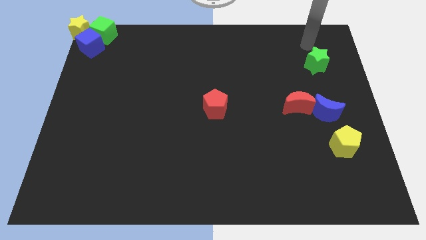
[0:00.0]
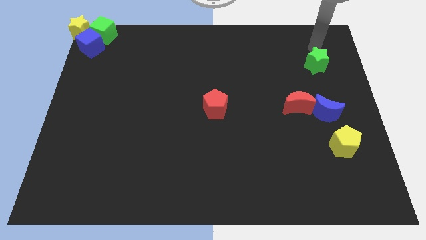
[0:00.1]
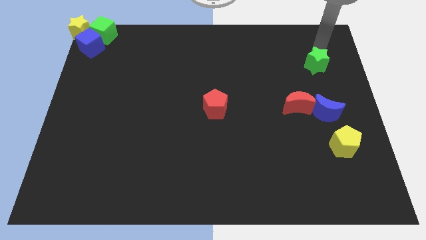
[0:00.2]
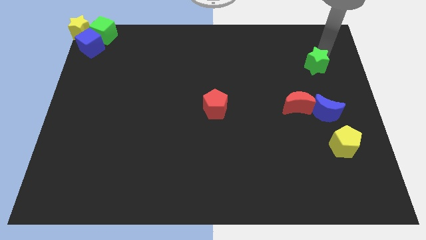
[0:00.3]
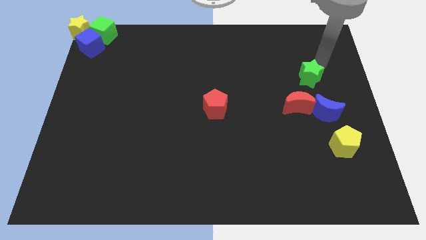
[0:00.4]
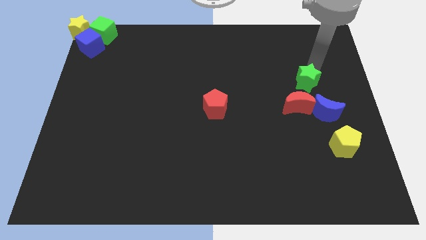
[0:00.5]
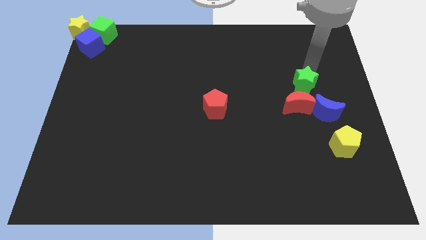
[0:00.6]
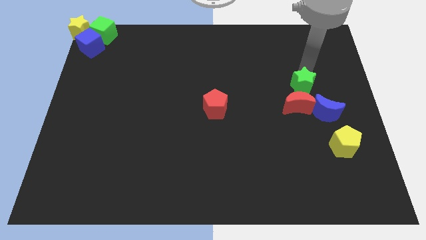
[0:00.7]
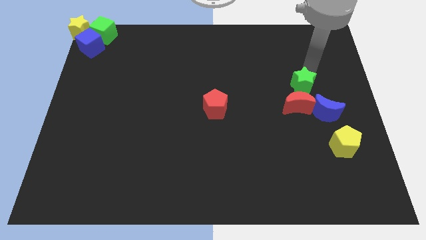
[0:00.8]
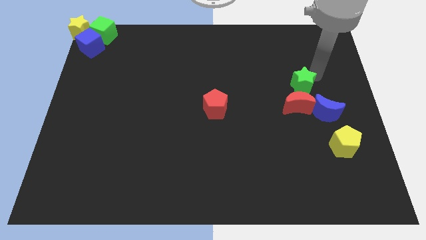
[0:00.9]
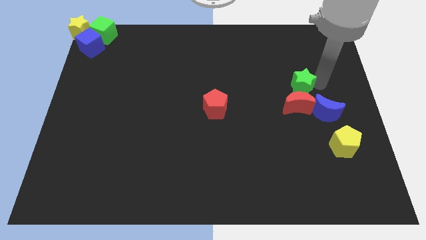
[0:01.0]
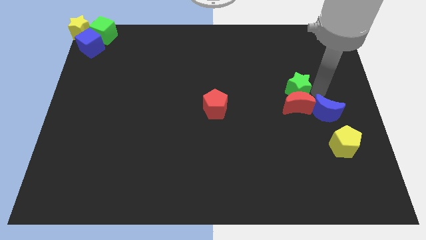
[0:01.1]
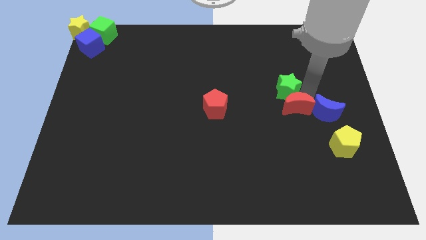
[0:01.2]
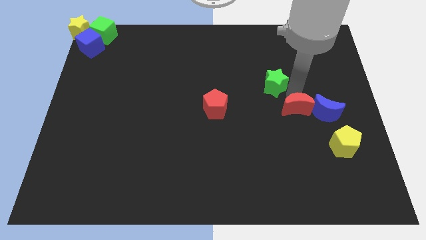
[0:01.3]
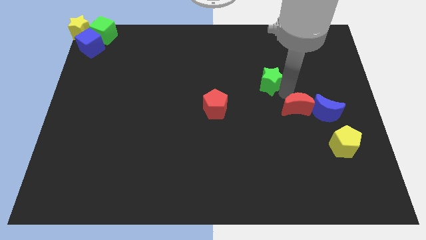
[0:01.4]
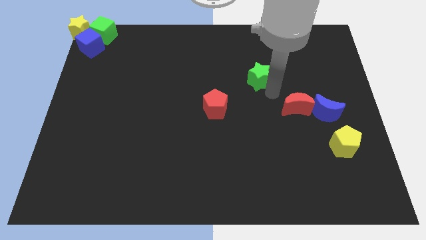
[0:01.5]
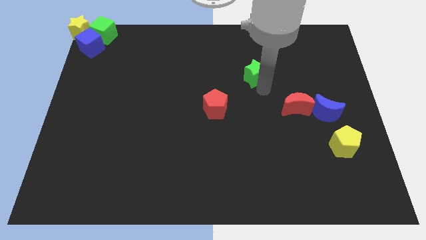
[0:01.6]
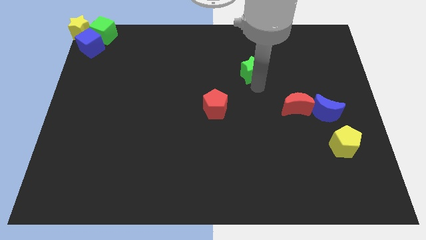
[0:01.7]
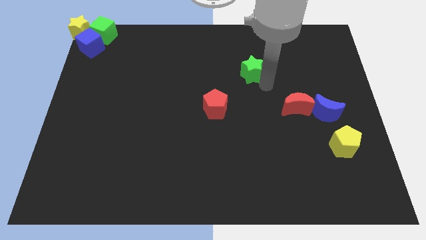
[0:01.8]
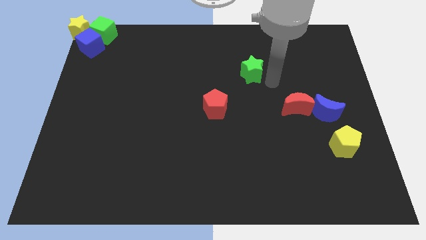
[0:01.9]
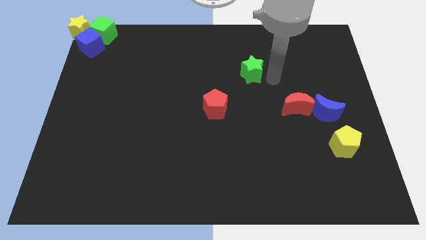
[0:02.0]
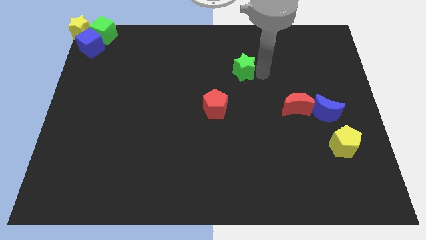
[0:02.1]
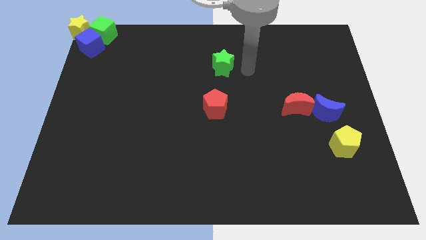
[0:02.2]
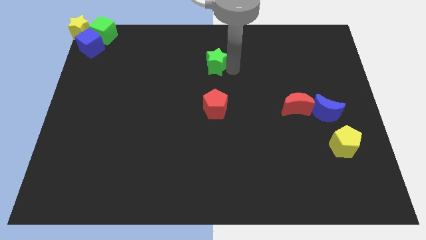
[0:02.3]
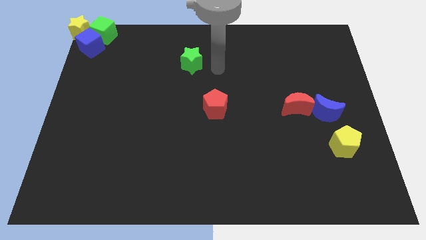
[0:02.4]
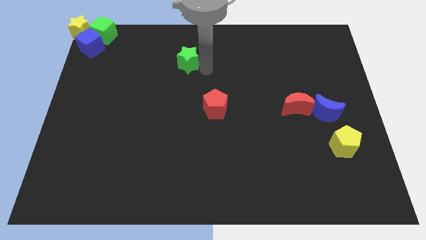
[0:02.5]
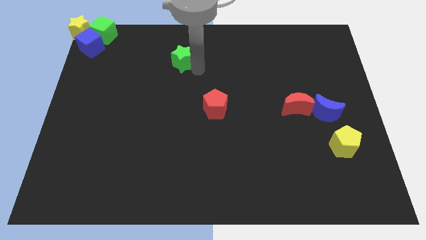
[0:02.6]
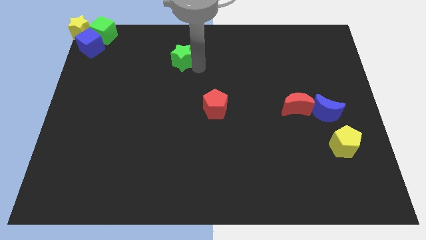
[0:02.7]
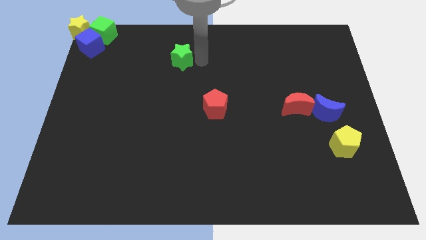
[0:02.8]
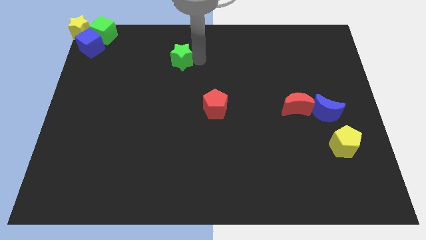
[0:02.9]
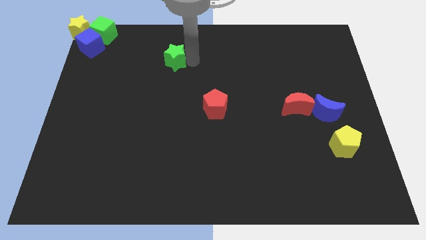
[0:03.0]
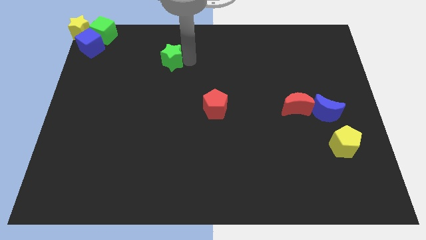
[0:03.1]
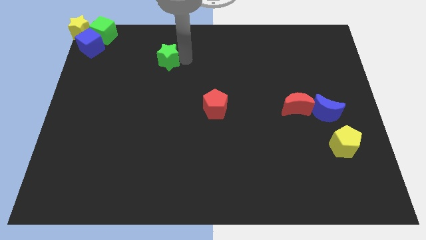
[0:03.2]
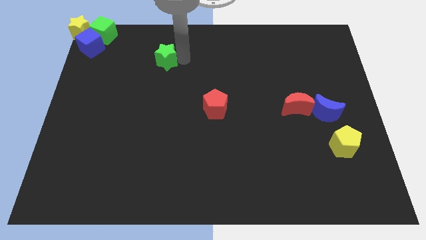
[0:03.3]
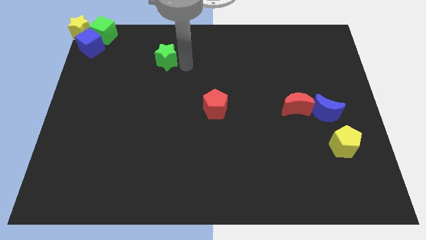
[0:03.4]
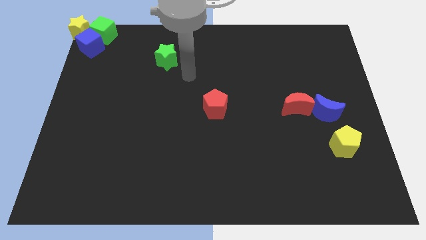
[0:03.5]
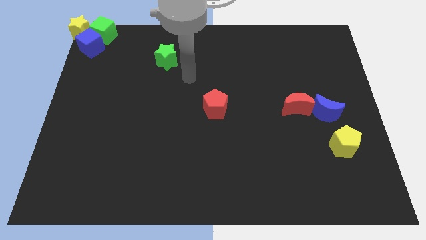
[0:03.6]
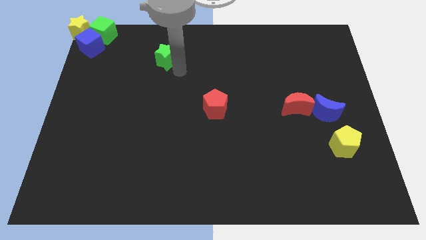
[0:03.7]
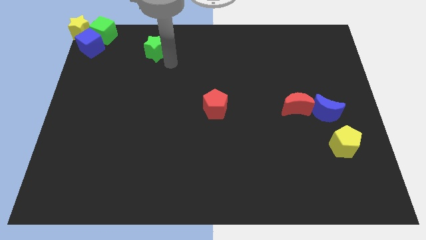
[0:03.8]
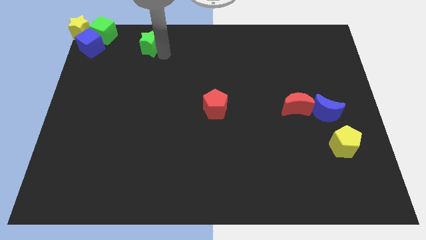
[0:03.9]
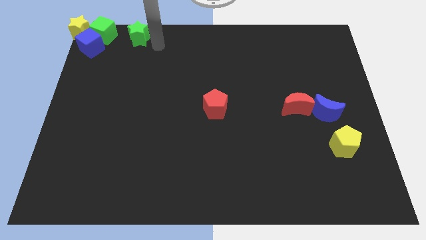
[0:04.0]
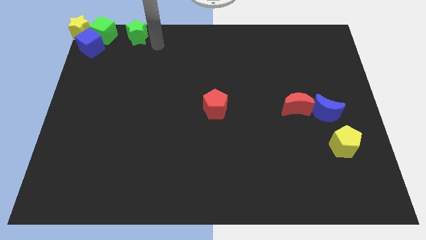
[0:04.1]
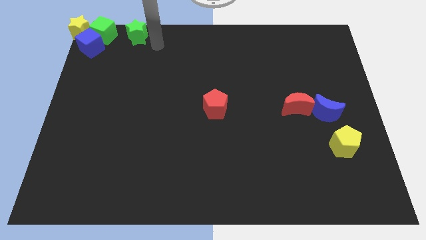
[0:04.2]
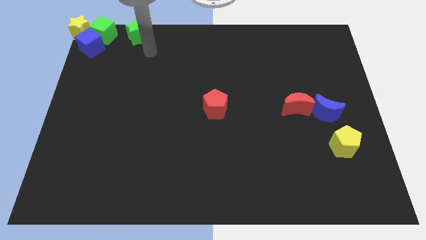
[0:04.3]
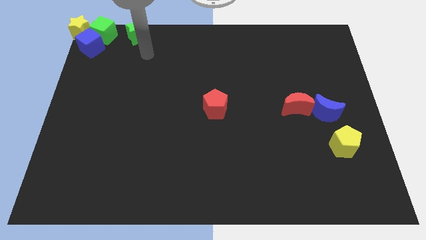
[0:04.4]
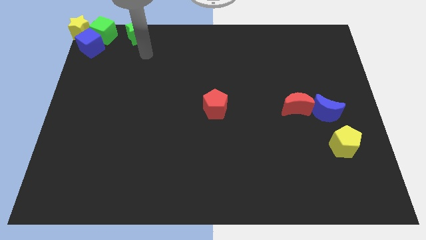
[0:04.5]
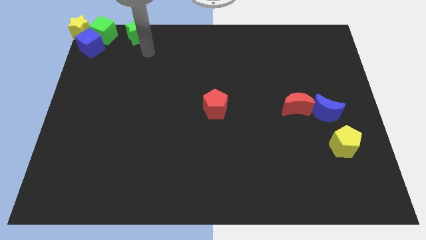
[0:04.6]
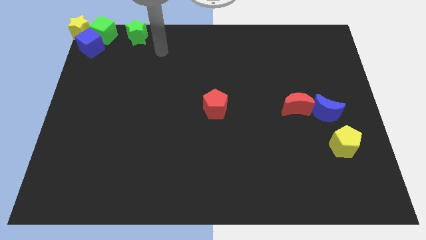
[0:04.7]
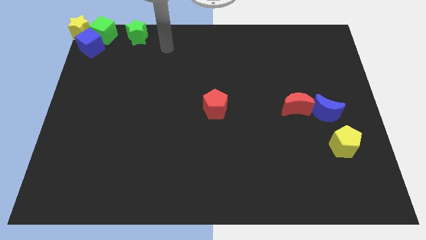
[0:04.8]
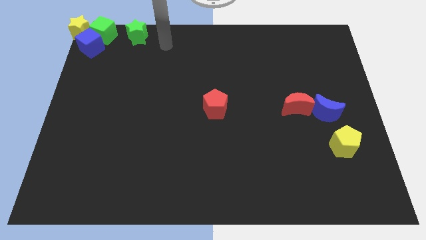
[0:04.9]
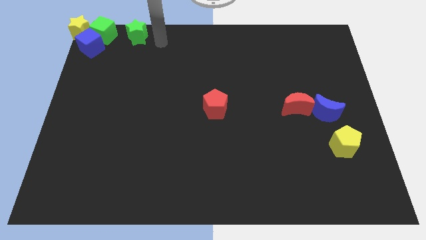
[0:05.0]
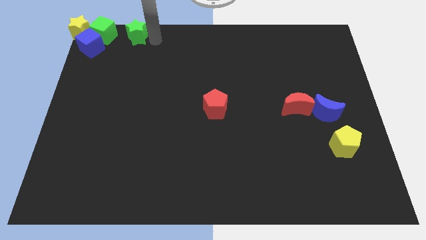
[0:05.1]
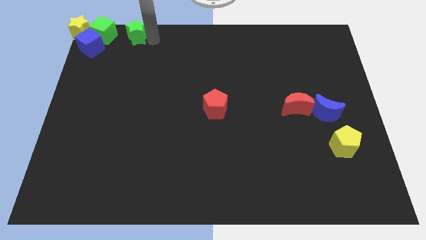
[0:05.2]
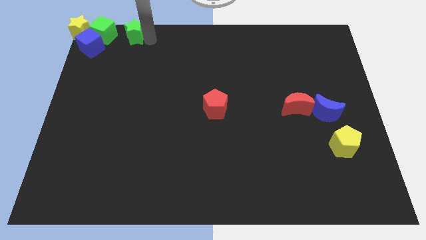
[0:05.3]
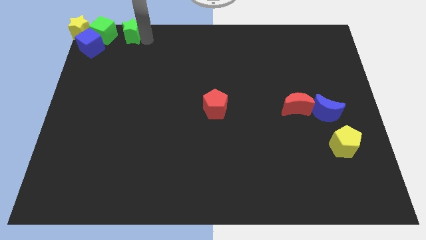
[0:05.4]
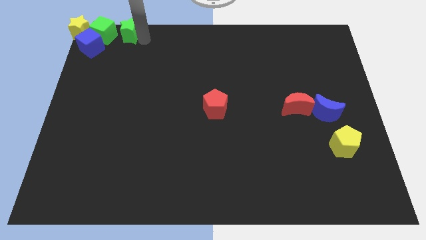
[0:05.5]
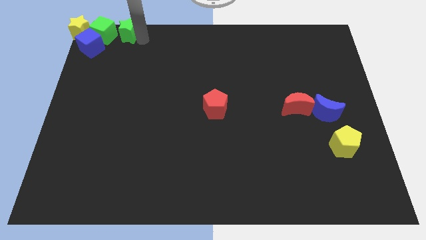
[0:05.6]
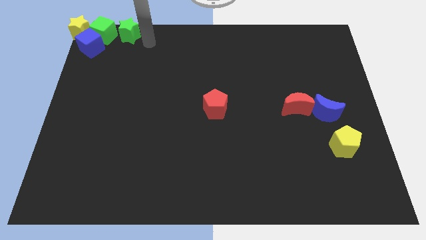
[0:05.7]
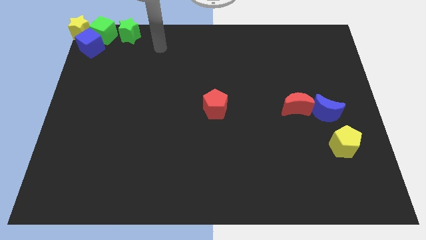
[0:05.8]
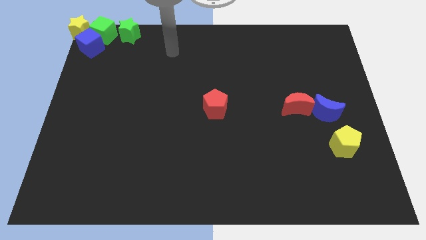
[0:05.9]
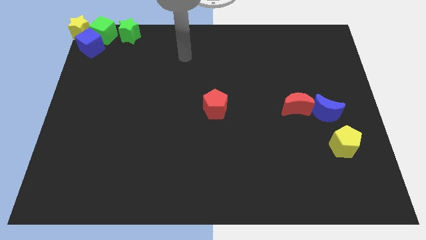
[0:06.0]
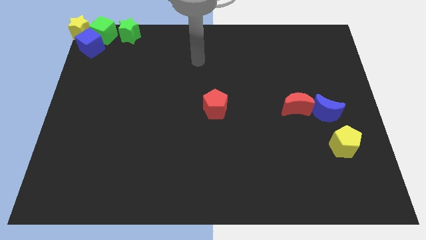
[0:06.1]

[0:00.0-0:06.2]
place the green star towards the right side of the green cube

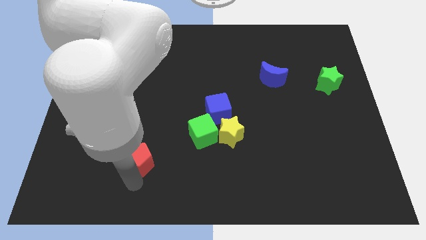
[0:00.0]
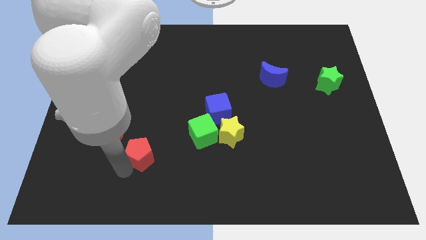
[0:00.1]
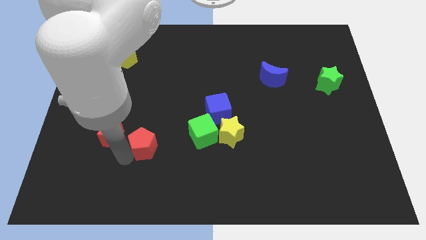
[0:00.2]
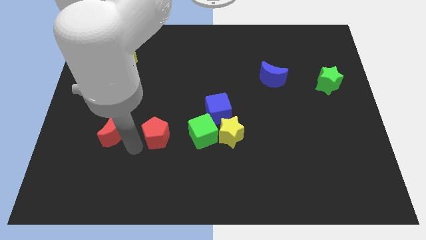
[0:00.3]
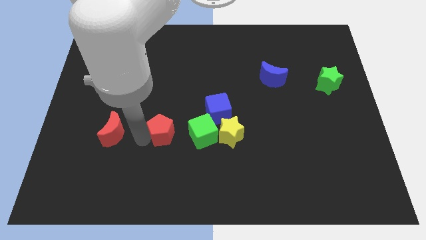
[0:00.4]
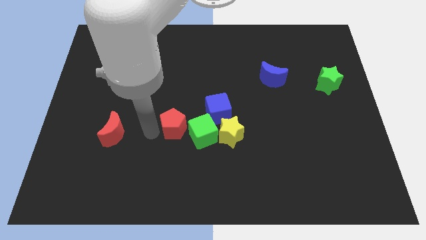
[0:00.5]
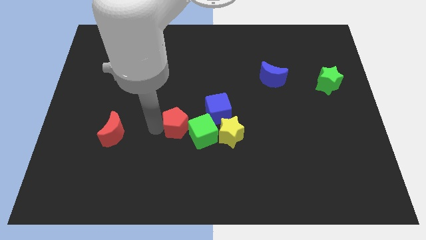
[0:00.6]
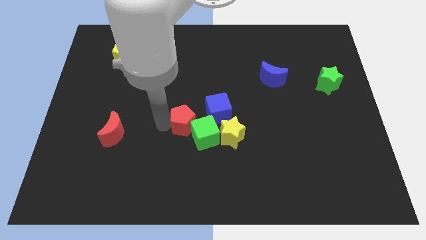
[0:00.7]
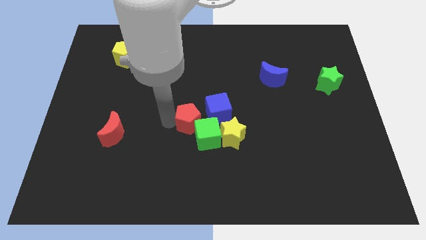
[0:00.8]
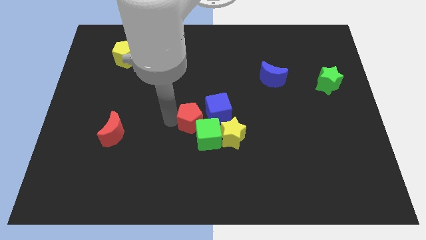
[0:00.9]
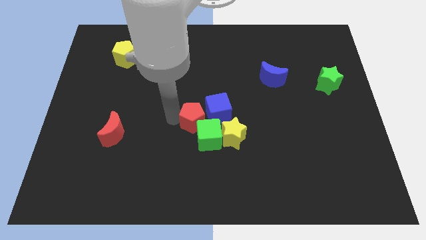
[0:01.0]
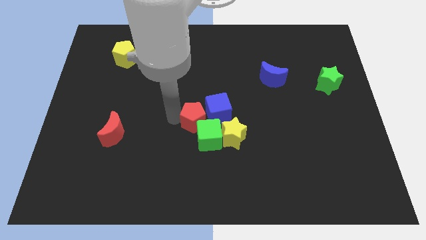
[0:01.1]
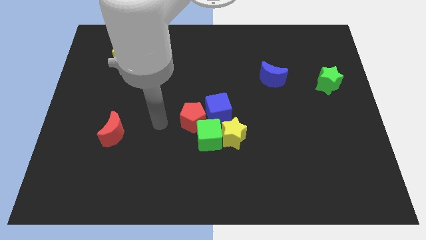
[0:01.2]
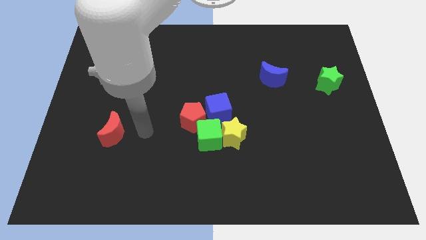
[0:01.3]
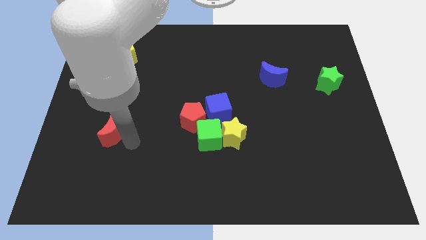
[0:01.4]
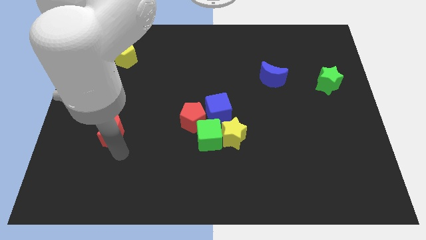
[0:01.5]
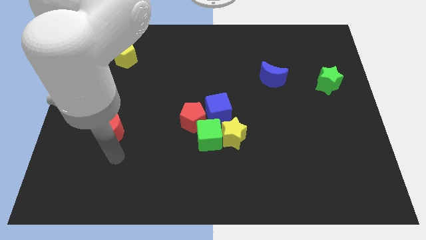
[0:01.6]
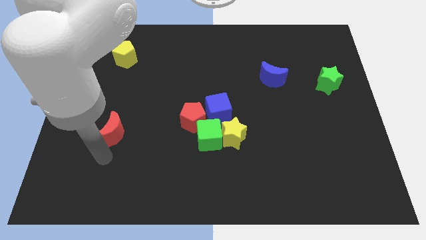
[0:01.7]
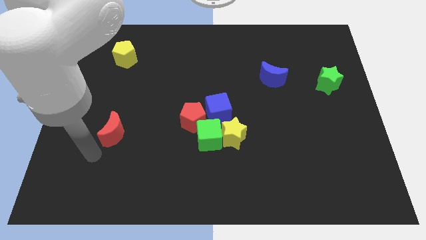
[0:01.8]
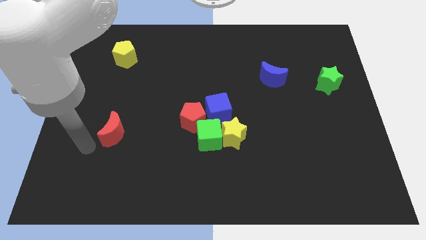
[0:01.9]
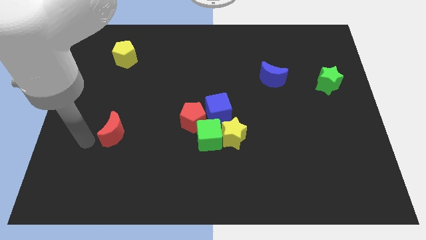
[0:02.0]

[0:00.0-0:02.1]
push the red pentagon to the left of the blue cube

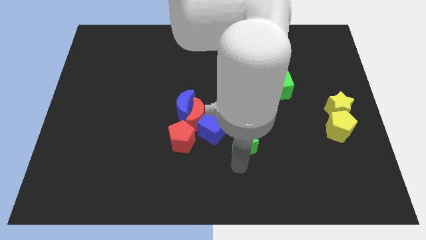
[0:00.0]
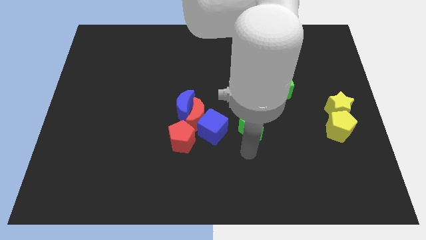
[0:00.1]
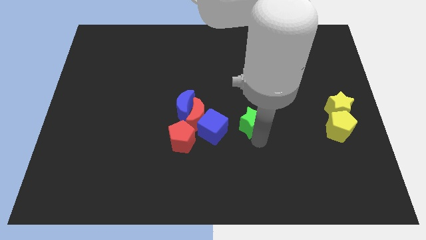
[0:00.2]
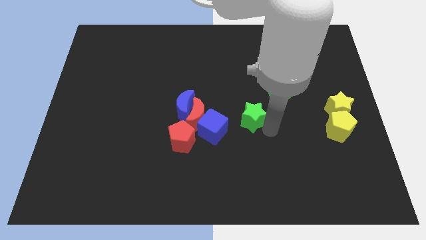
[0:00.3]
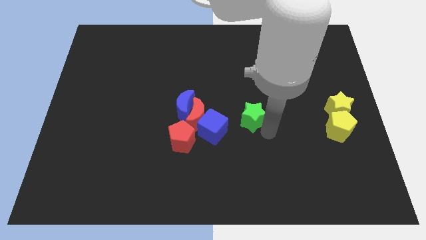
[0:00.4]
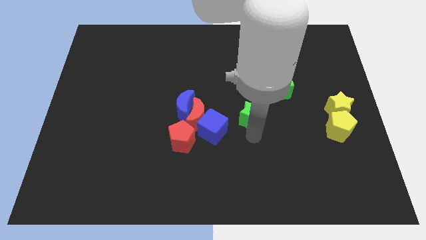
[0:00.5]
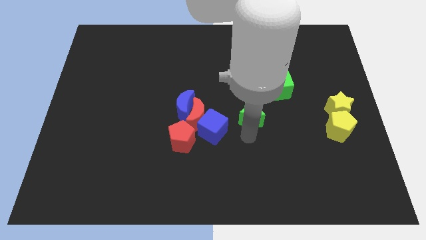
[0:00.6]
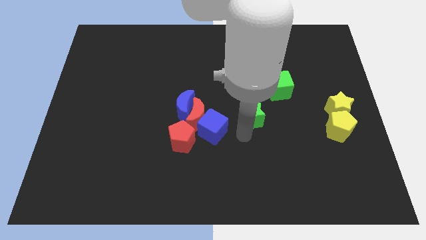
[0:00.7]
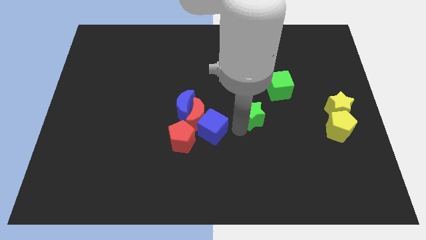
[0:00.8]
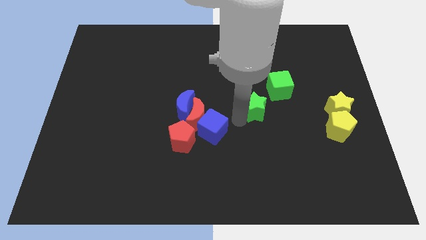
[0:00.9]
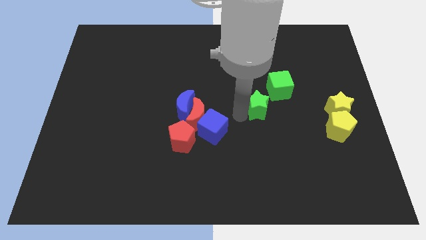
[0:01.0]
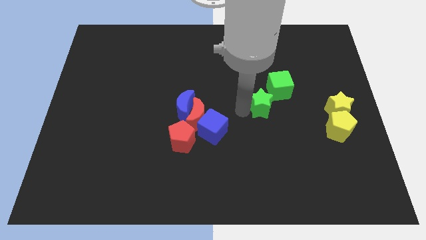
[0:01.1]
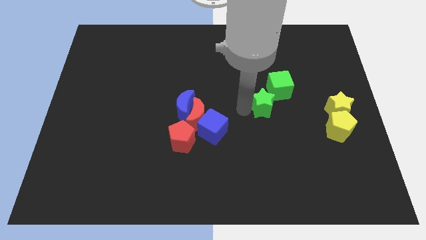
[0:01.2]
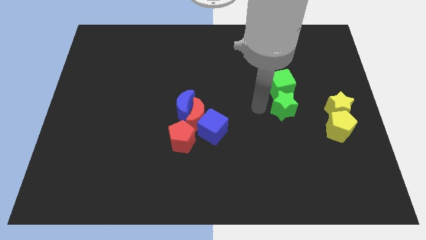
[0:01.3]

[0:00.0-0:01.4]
push the green star into the green cube
